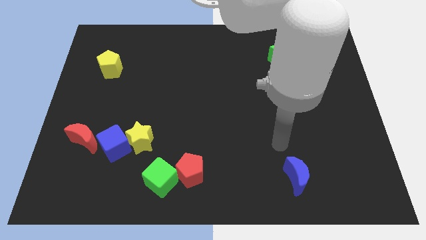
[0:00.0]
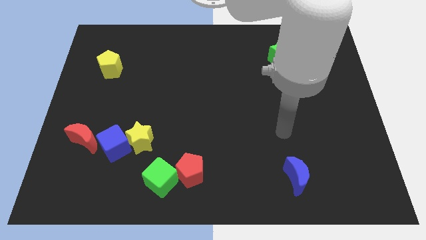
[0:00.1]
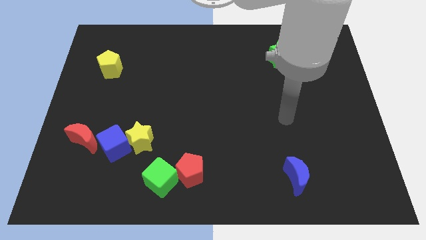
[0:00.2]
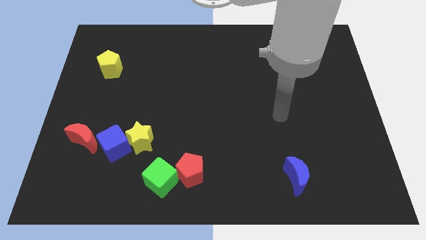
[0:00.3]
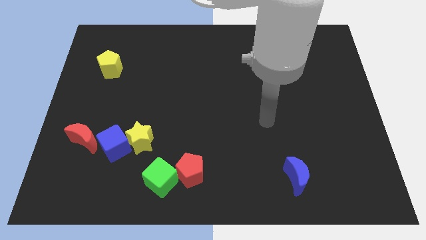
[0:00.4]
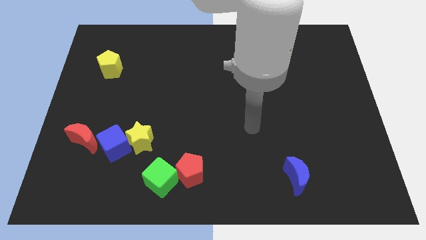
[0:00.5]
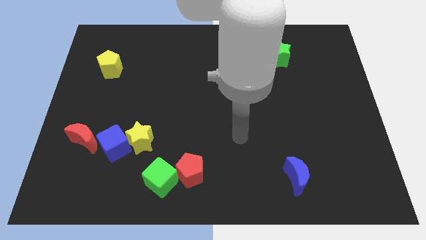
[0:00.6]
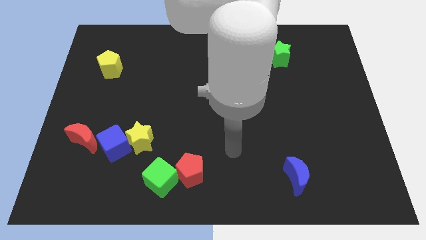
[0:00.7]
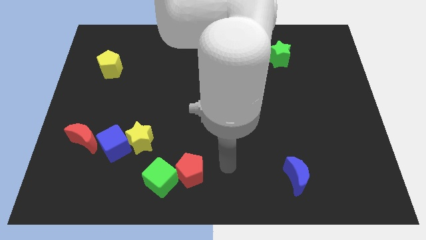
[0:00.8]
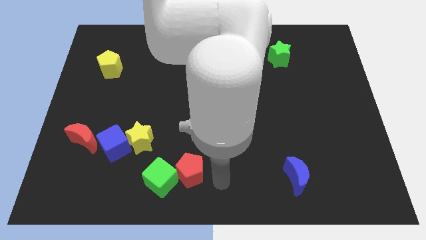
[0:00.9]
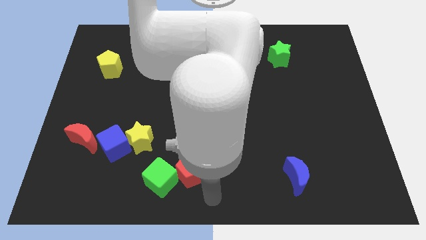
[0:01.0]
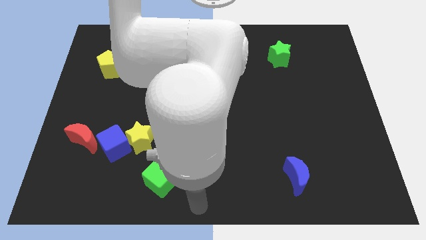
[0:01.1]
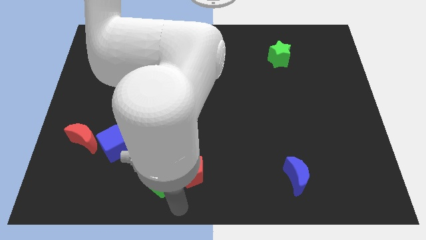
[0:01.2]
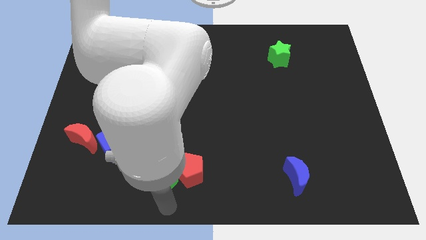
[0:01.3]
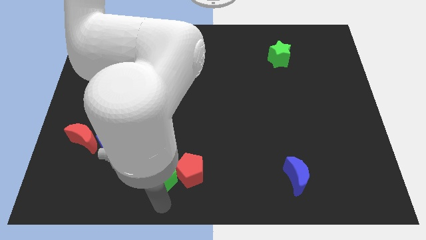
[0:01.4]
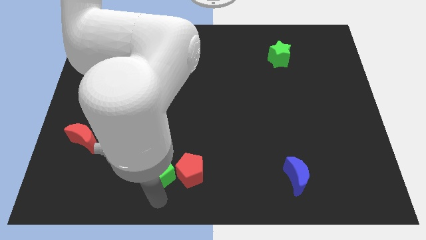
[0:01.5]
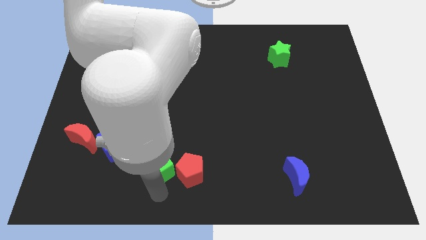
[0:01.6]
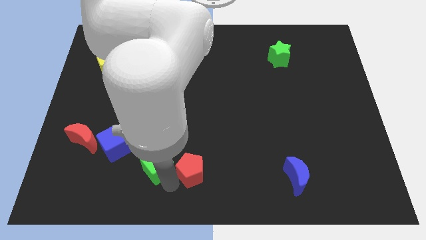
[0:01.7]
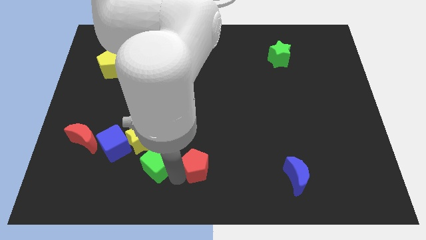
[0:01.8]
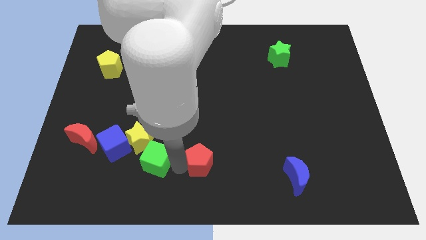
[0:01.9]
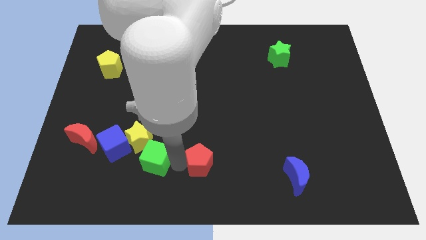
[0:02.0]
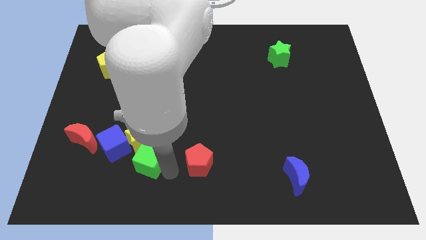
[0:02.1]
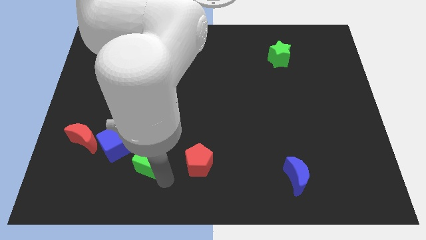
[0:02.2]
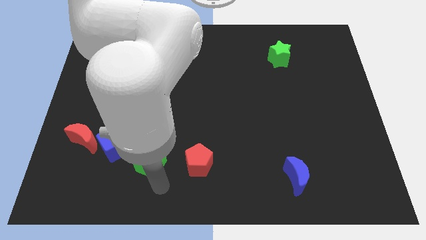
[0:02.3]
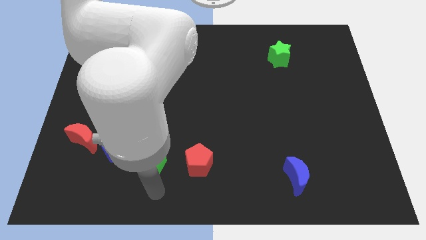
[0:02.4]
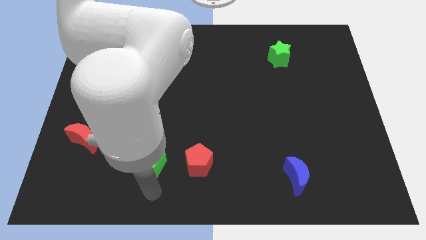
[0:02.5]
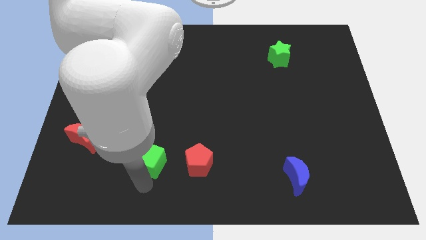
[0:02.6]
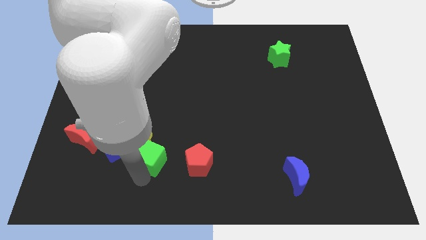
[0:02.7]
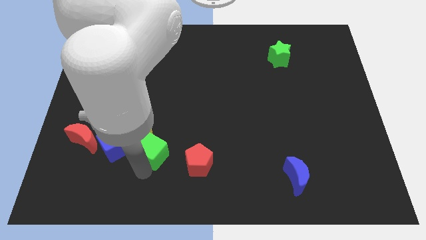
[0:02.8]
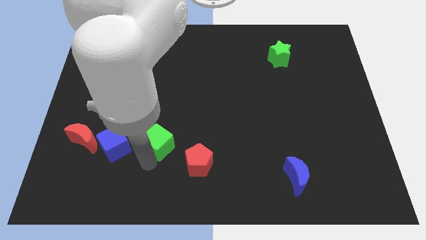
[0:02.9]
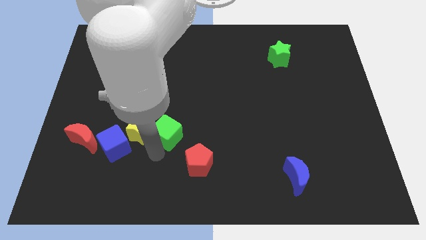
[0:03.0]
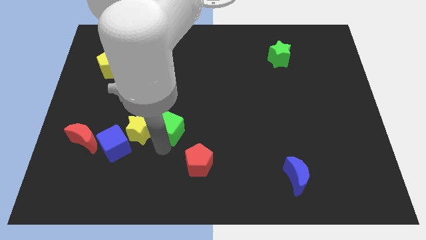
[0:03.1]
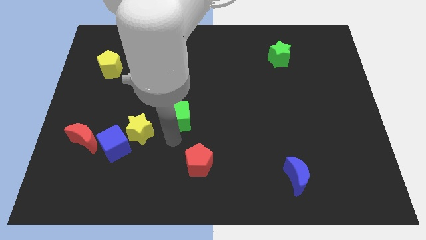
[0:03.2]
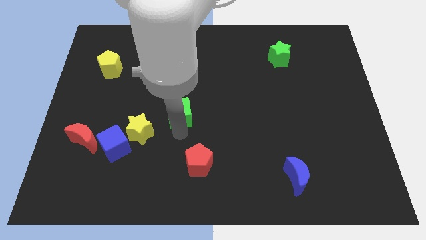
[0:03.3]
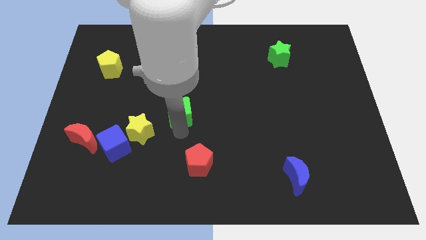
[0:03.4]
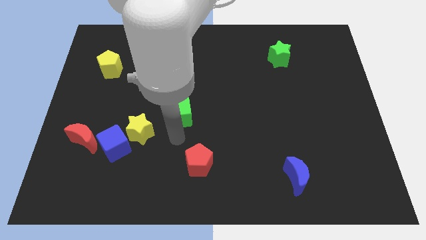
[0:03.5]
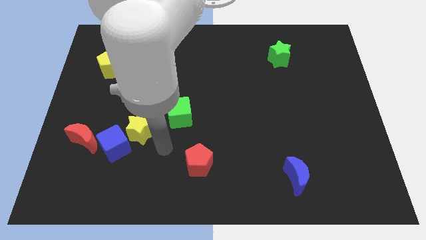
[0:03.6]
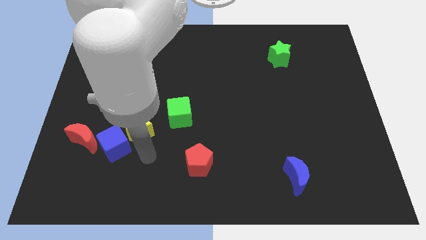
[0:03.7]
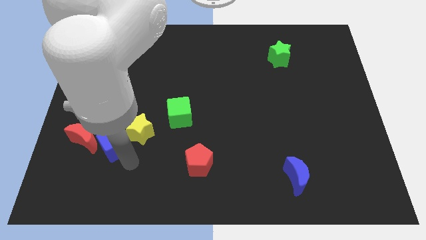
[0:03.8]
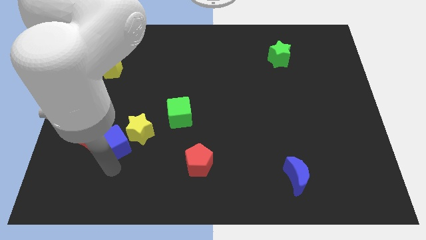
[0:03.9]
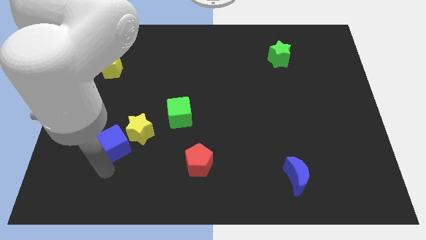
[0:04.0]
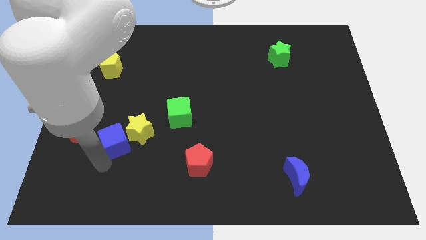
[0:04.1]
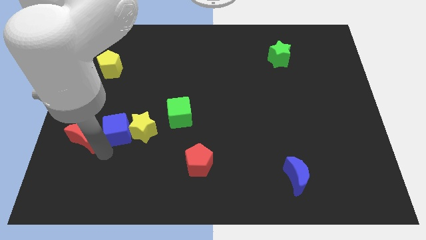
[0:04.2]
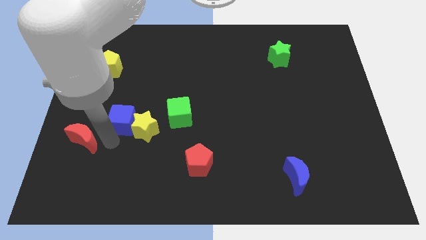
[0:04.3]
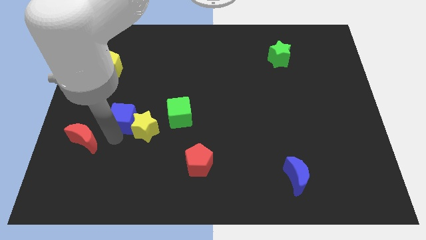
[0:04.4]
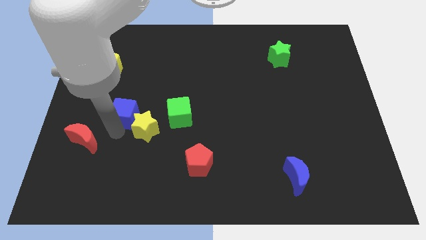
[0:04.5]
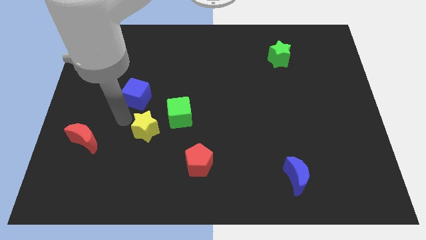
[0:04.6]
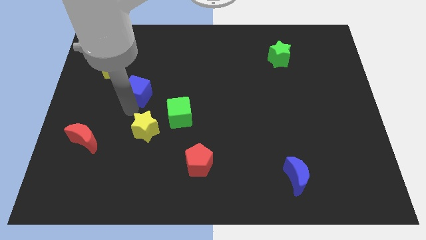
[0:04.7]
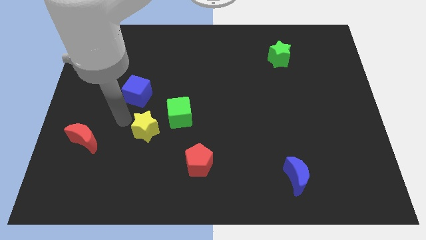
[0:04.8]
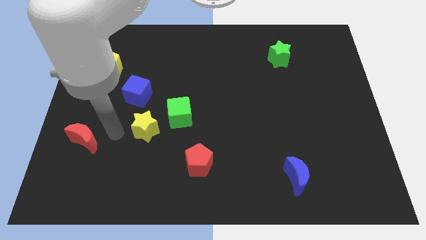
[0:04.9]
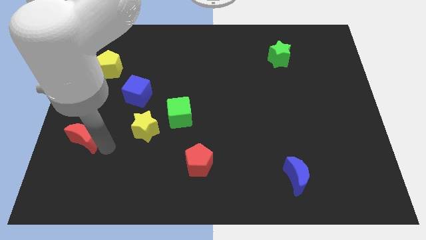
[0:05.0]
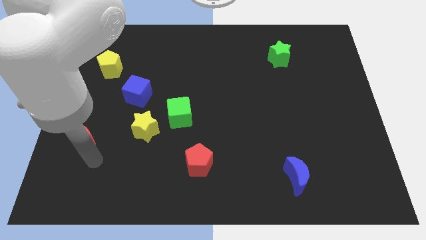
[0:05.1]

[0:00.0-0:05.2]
place the green cube and blue cube sightly upwards

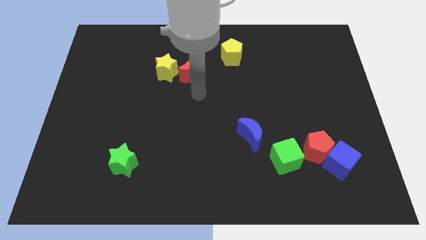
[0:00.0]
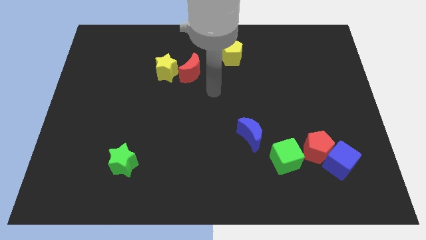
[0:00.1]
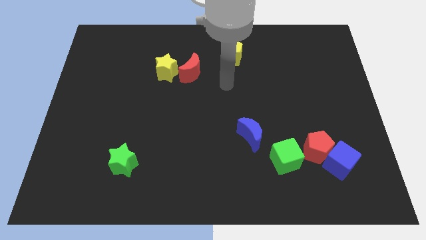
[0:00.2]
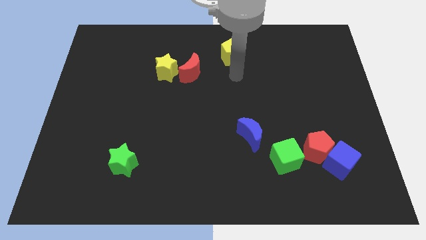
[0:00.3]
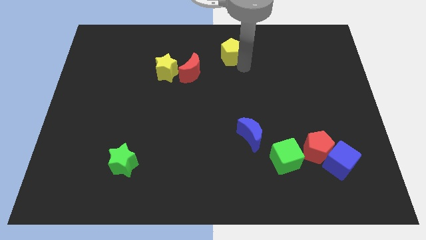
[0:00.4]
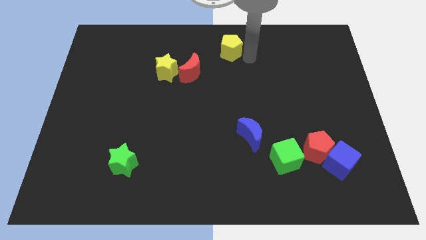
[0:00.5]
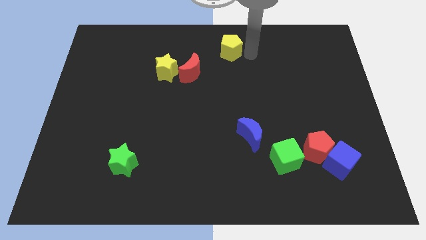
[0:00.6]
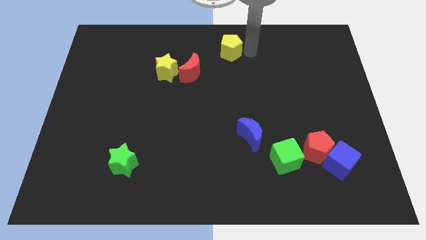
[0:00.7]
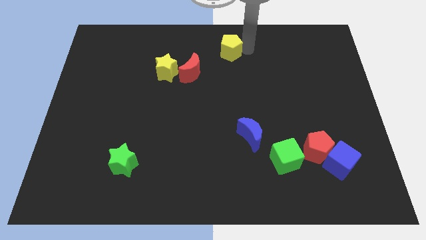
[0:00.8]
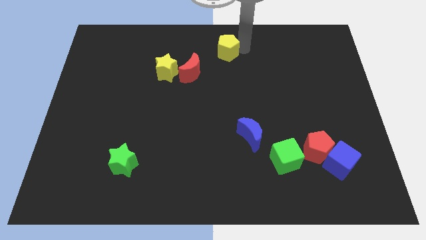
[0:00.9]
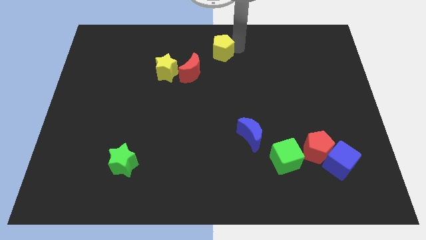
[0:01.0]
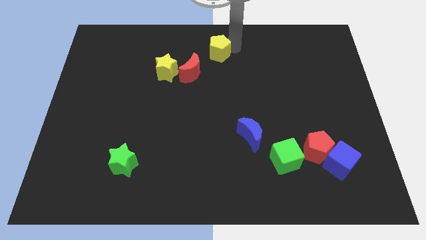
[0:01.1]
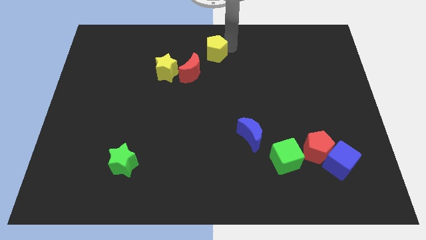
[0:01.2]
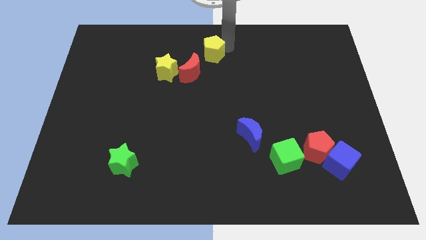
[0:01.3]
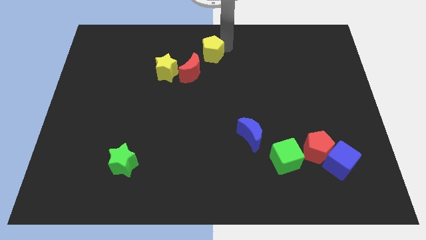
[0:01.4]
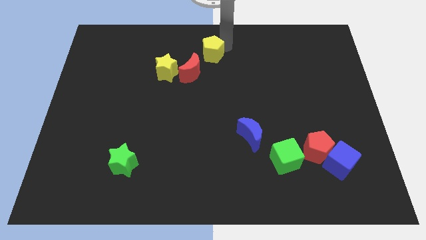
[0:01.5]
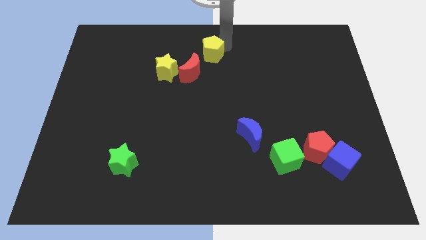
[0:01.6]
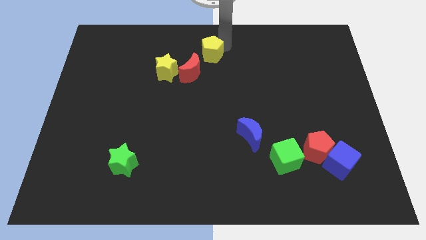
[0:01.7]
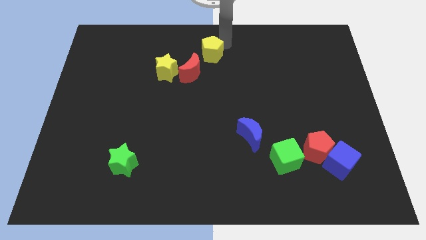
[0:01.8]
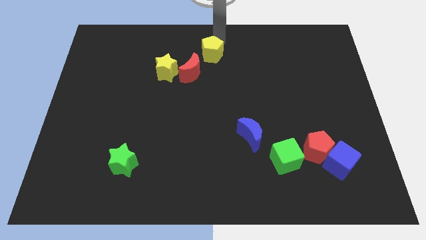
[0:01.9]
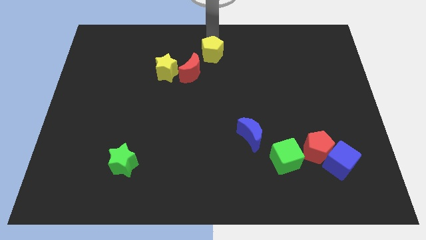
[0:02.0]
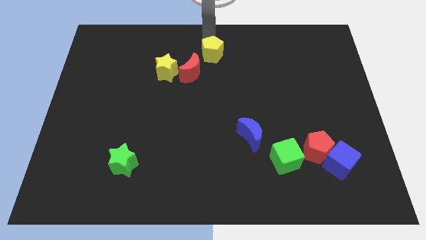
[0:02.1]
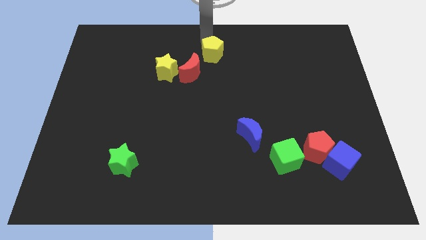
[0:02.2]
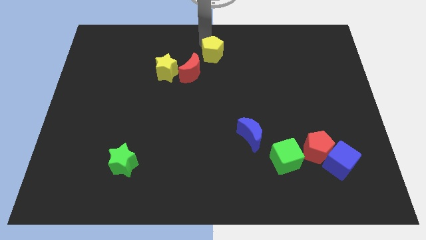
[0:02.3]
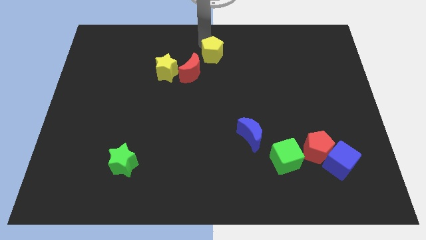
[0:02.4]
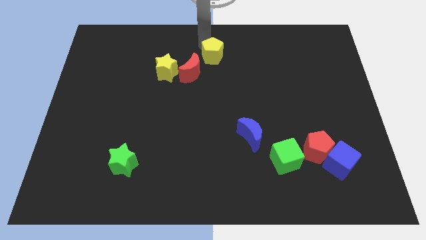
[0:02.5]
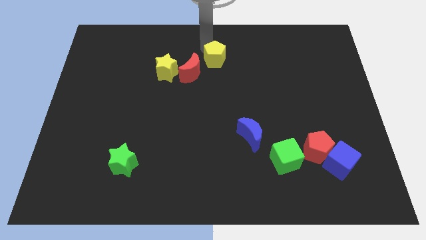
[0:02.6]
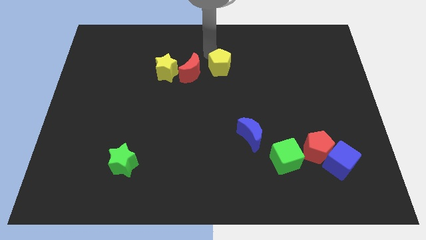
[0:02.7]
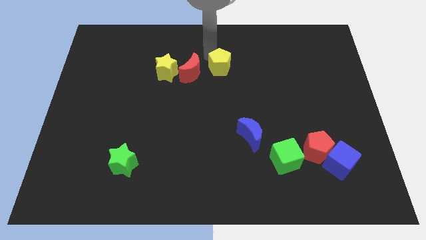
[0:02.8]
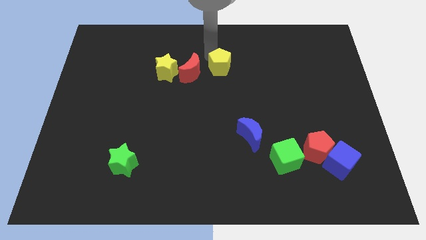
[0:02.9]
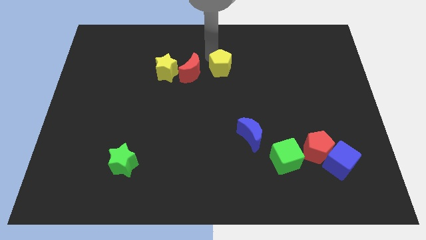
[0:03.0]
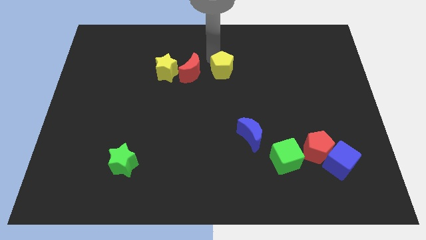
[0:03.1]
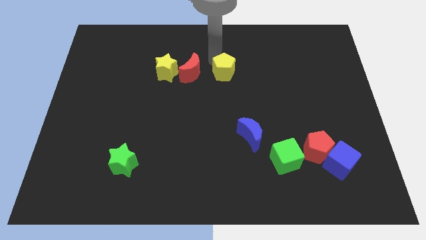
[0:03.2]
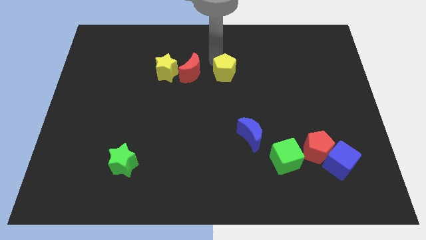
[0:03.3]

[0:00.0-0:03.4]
push the yellow pentagon to the right of the red moon

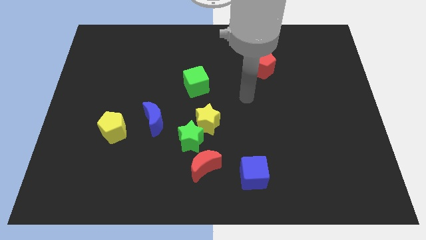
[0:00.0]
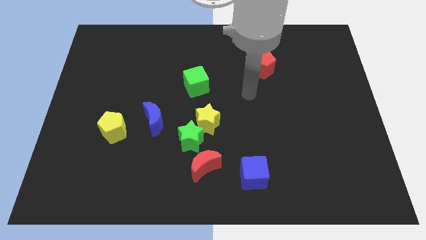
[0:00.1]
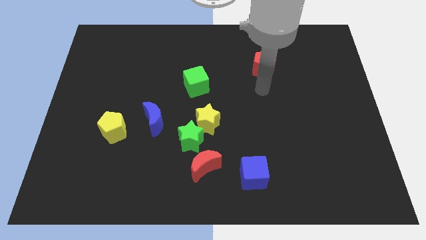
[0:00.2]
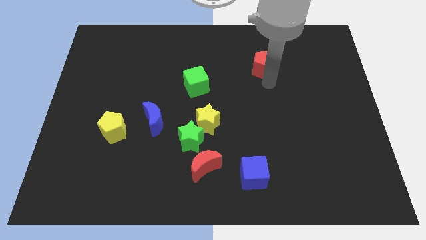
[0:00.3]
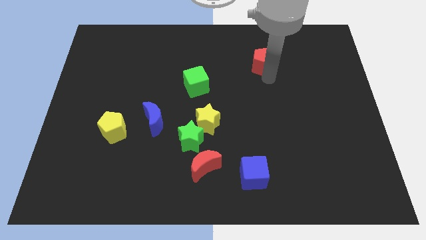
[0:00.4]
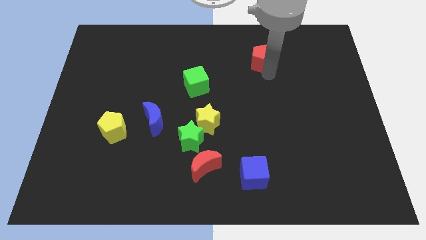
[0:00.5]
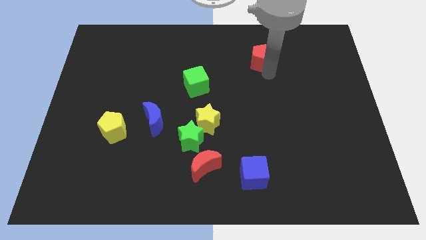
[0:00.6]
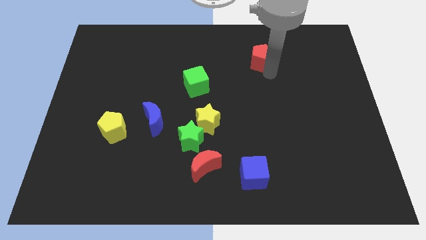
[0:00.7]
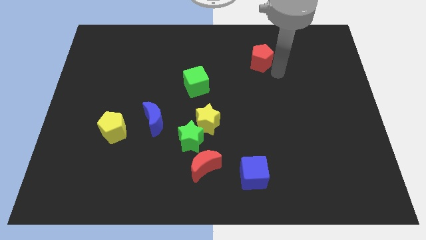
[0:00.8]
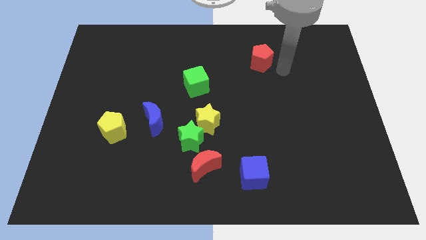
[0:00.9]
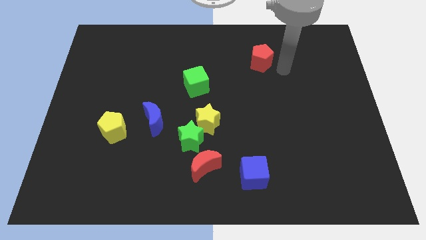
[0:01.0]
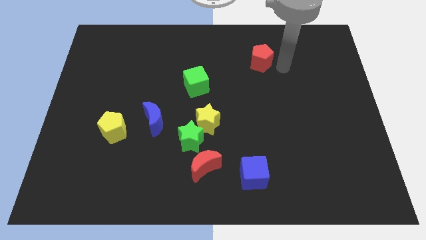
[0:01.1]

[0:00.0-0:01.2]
slide the red pentagon slightly towards up
